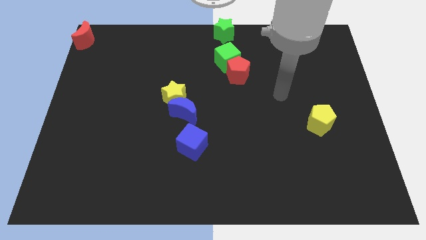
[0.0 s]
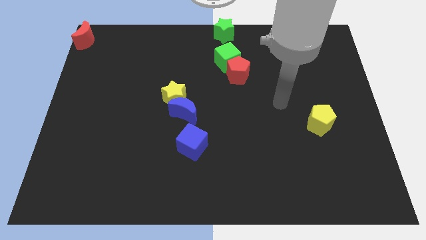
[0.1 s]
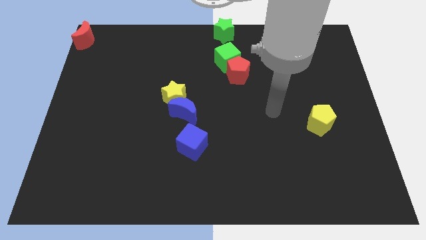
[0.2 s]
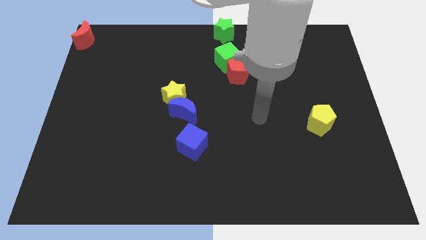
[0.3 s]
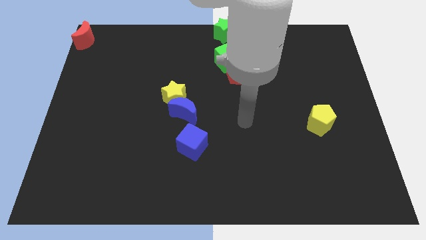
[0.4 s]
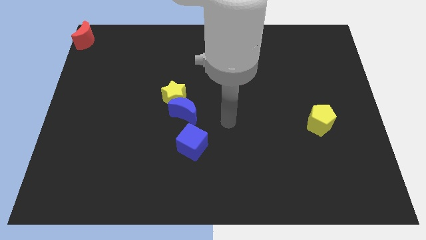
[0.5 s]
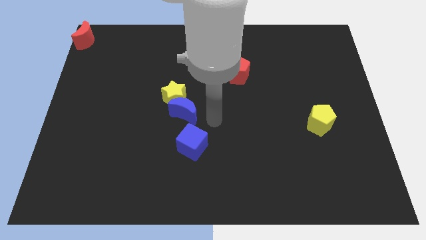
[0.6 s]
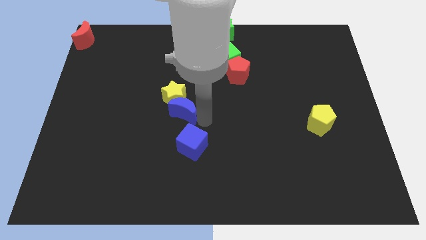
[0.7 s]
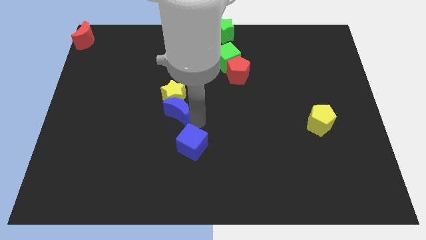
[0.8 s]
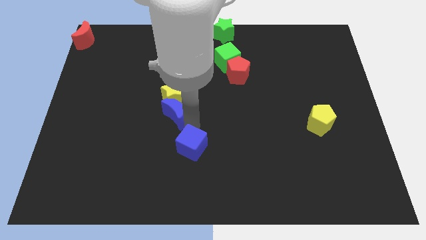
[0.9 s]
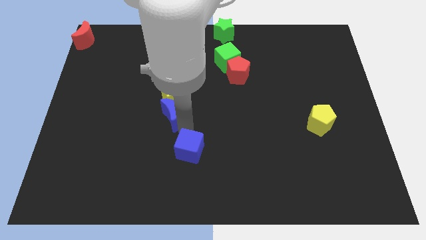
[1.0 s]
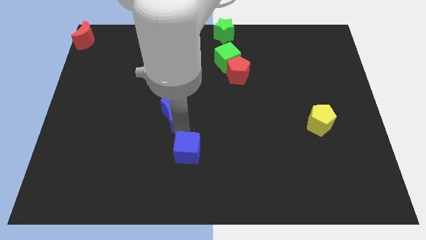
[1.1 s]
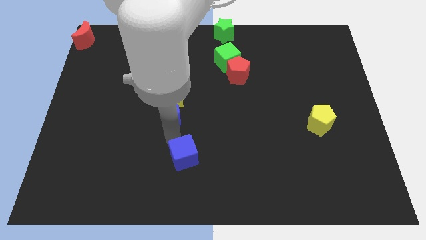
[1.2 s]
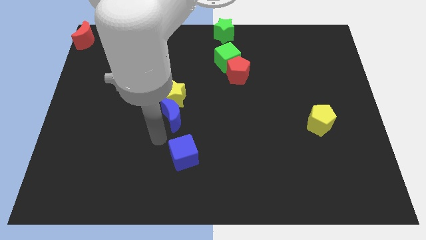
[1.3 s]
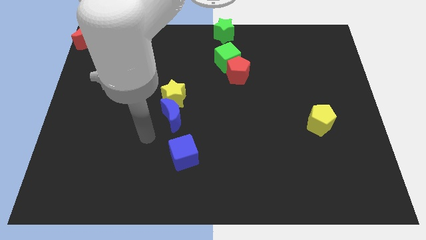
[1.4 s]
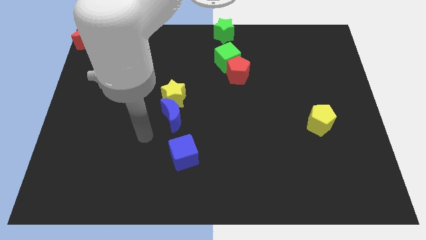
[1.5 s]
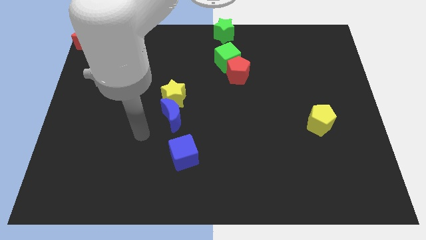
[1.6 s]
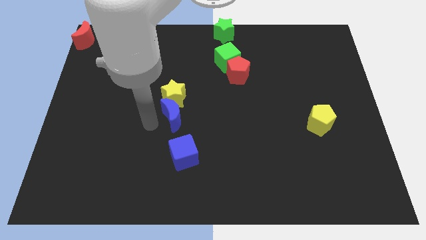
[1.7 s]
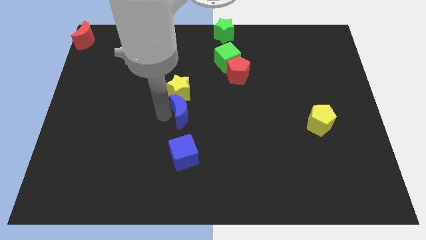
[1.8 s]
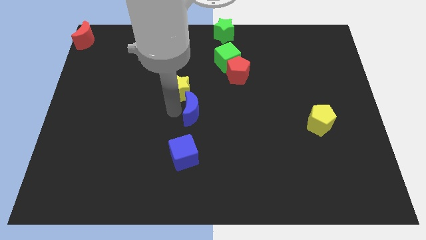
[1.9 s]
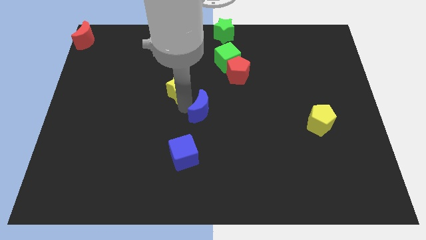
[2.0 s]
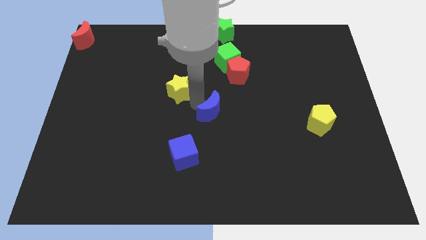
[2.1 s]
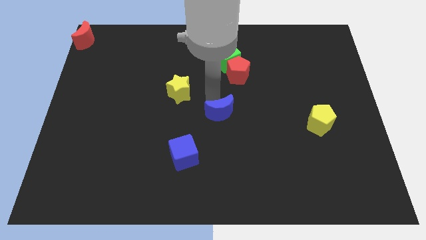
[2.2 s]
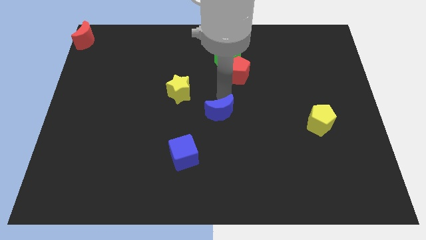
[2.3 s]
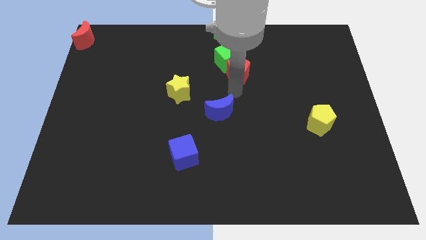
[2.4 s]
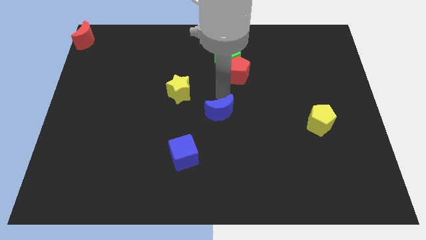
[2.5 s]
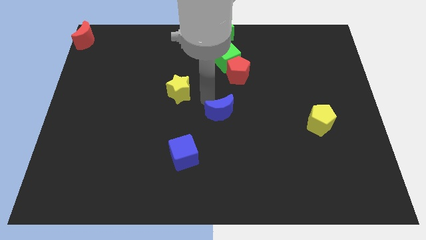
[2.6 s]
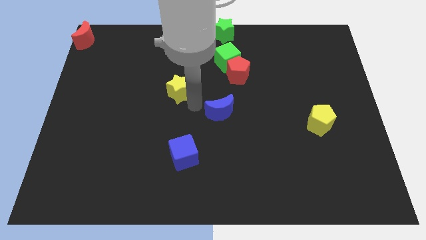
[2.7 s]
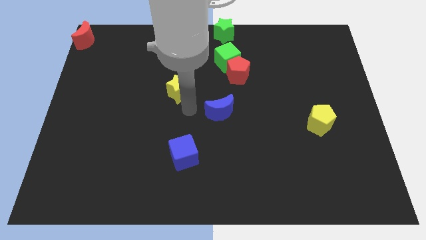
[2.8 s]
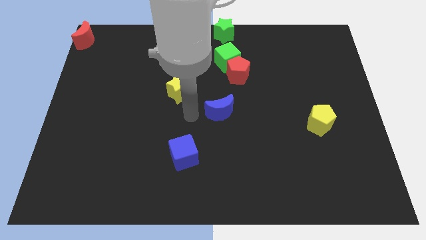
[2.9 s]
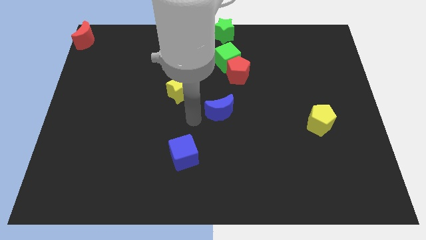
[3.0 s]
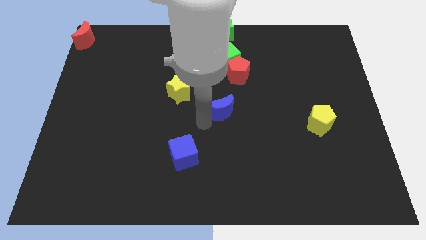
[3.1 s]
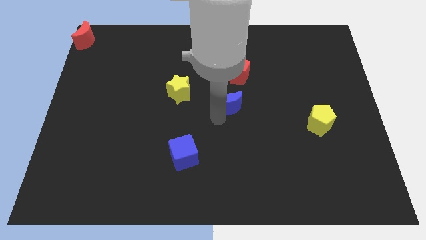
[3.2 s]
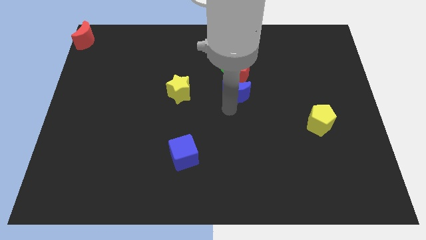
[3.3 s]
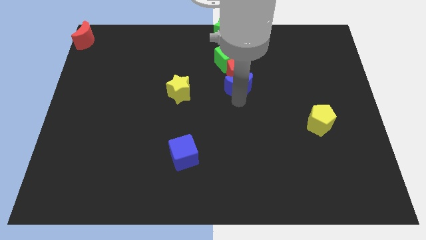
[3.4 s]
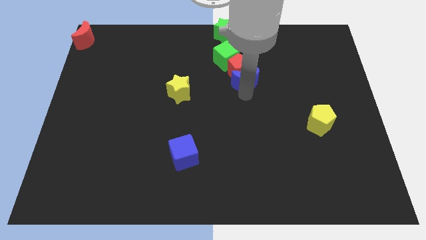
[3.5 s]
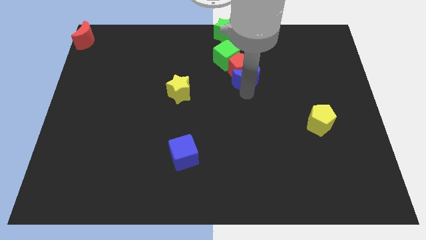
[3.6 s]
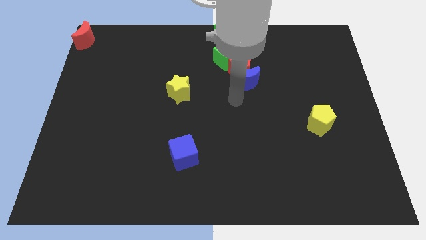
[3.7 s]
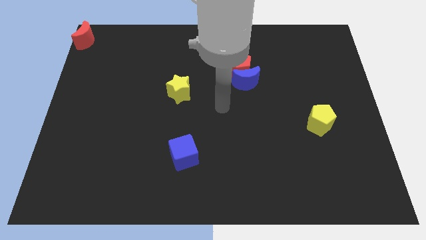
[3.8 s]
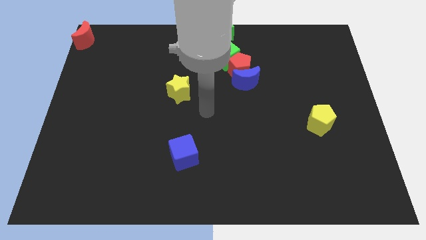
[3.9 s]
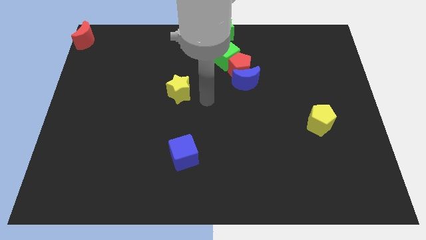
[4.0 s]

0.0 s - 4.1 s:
move blue crescent into red pentagon

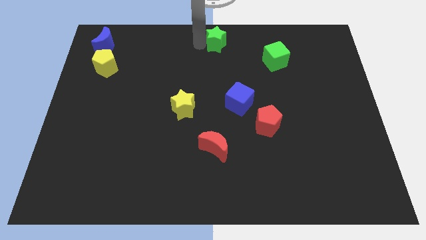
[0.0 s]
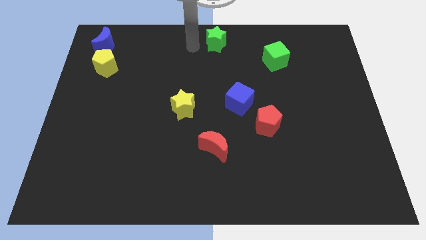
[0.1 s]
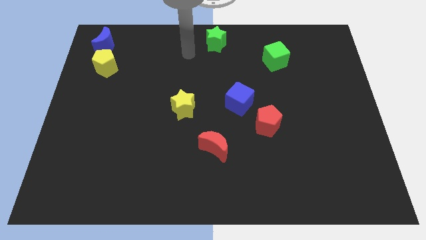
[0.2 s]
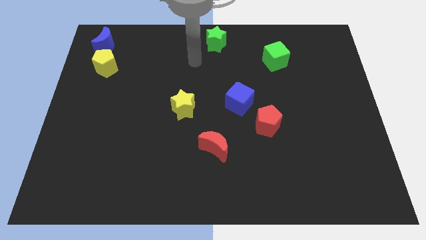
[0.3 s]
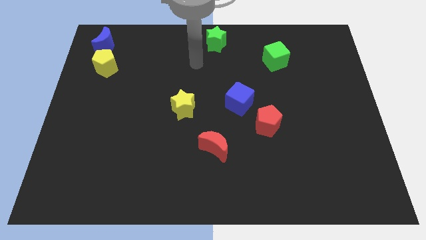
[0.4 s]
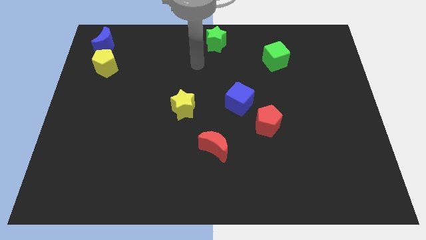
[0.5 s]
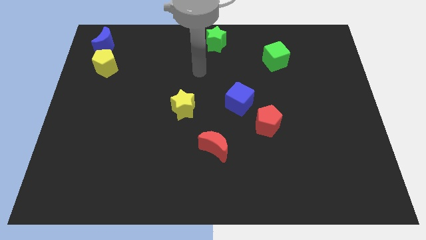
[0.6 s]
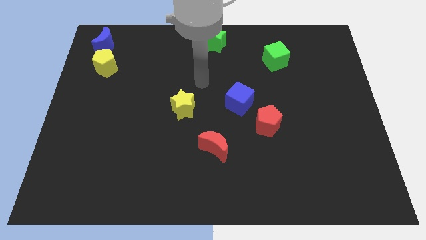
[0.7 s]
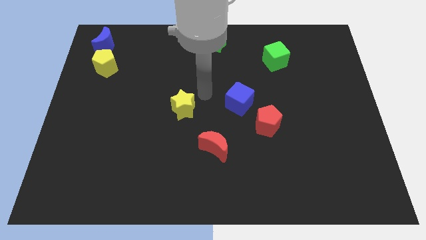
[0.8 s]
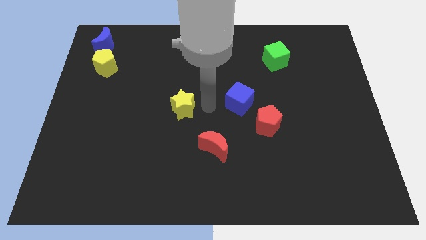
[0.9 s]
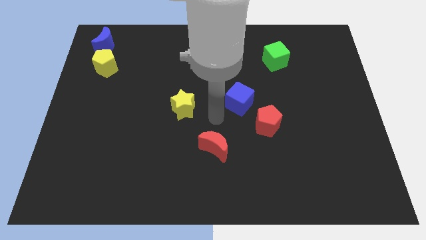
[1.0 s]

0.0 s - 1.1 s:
put your arm in between the yellow star and blue cube

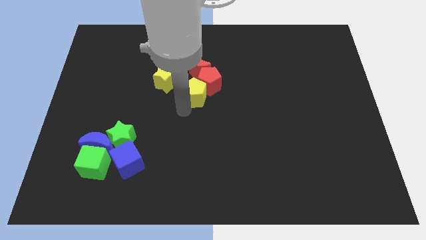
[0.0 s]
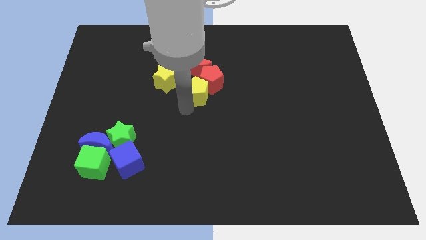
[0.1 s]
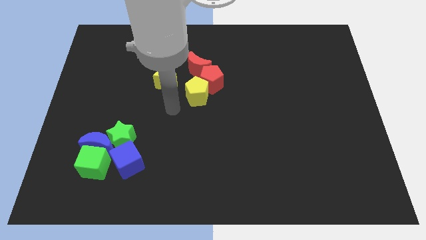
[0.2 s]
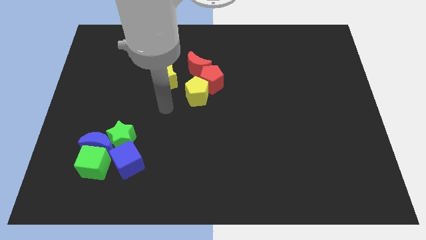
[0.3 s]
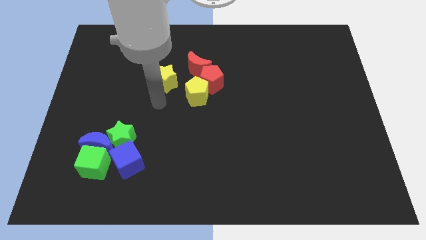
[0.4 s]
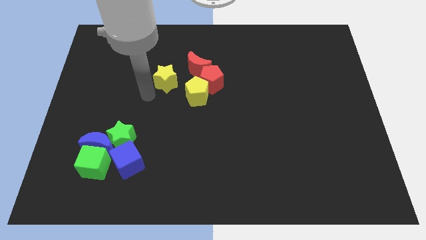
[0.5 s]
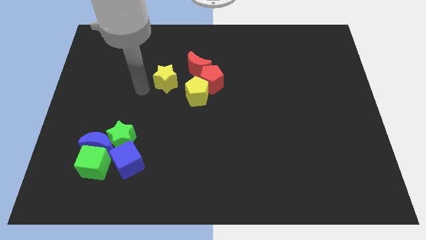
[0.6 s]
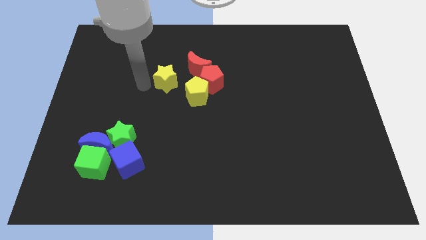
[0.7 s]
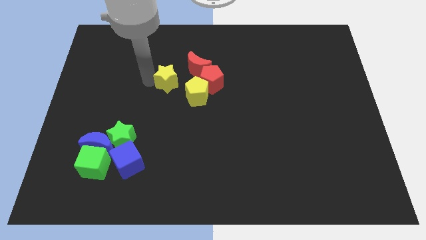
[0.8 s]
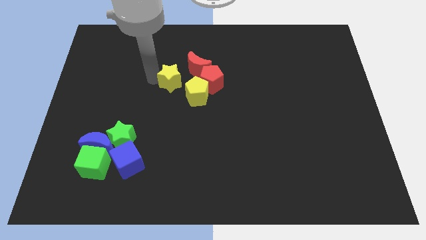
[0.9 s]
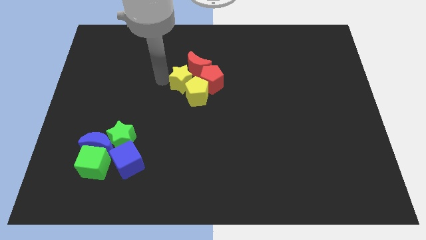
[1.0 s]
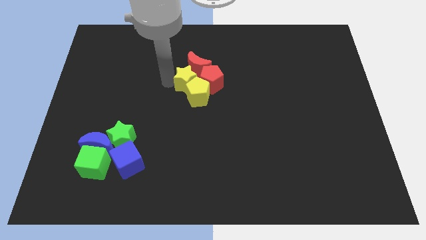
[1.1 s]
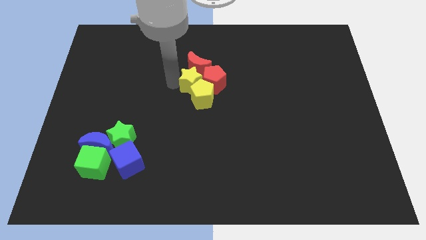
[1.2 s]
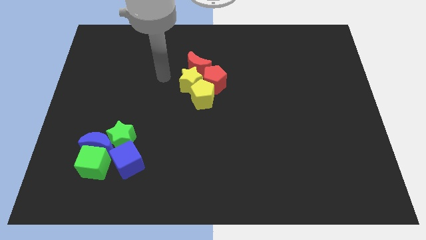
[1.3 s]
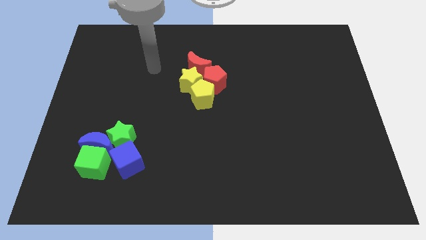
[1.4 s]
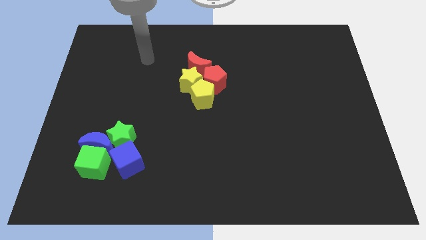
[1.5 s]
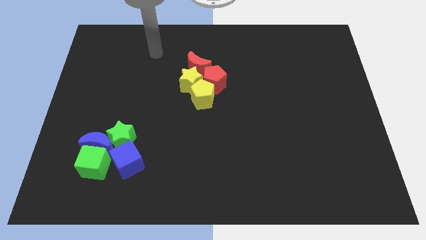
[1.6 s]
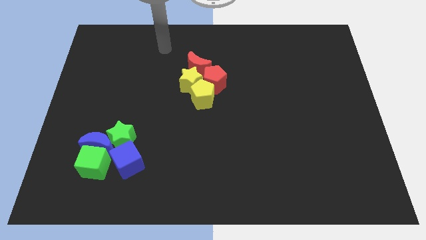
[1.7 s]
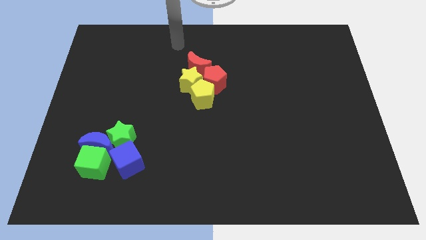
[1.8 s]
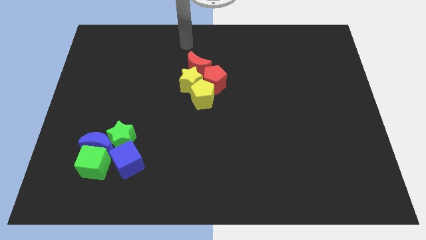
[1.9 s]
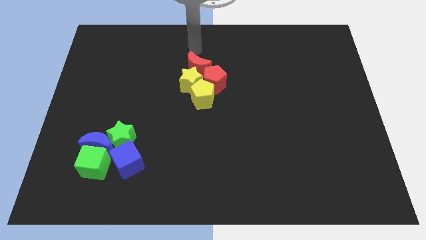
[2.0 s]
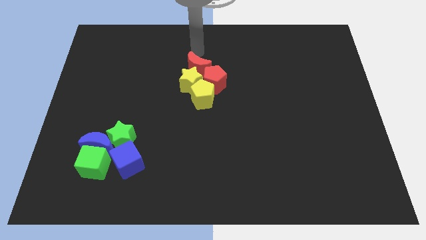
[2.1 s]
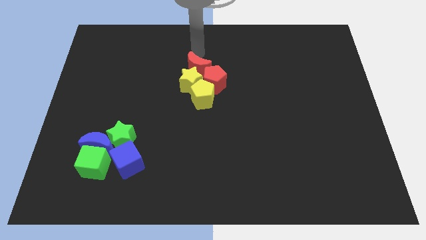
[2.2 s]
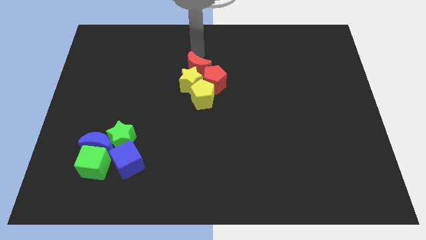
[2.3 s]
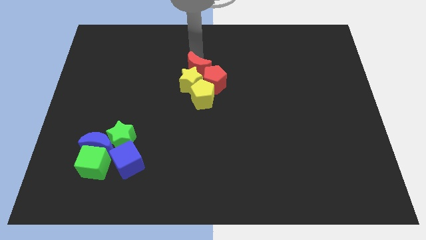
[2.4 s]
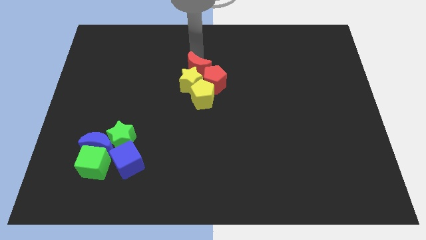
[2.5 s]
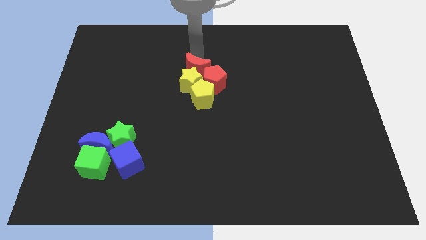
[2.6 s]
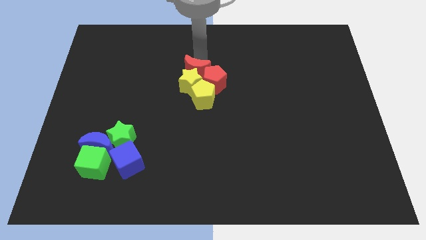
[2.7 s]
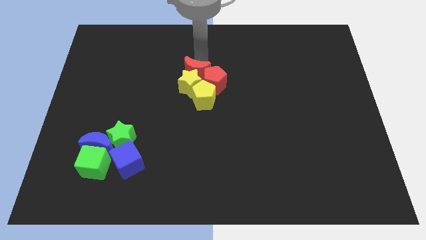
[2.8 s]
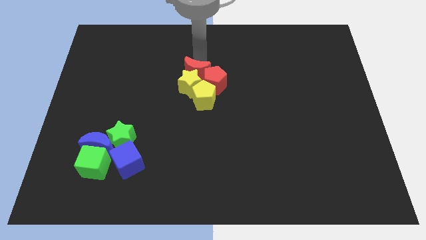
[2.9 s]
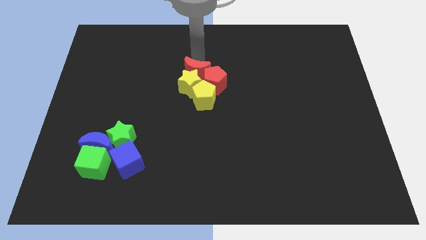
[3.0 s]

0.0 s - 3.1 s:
make yellow and red blocks touch together

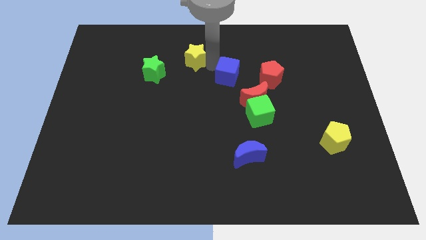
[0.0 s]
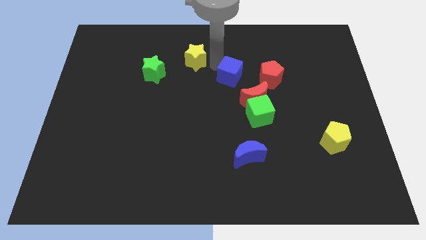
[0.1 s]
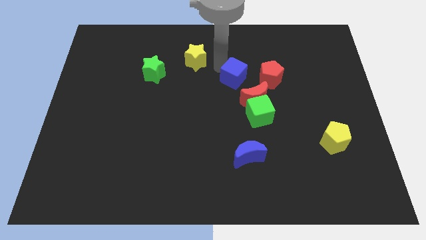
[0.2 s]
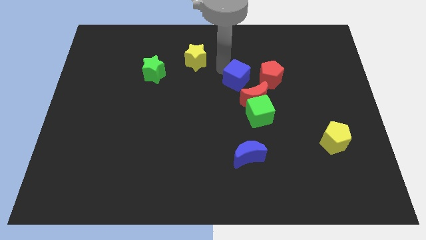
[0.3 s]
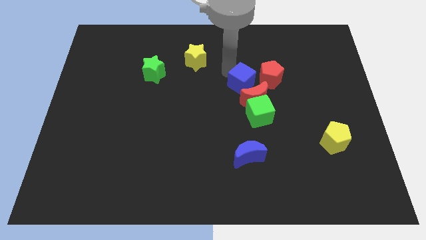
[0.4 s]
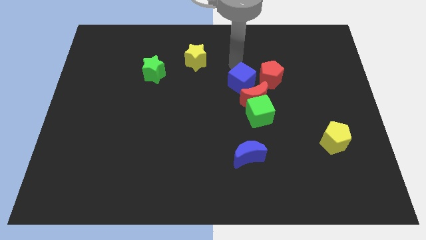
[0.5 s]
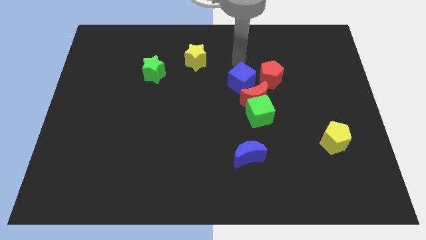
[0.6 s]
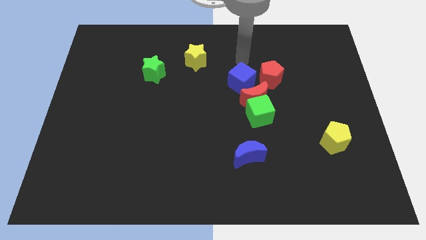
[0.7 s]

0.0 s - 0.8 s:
push the blue cube above the red crescent
